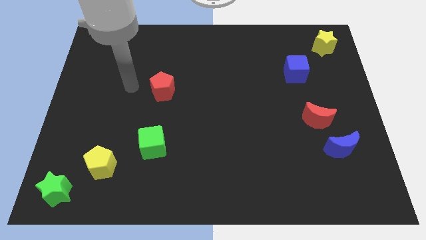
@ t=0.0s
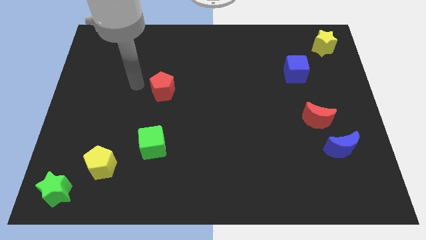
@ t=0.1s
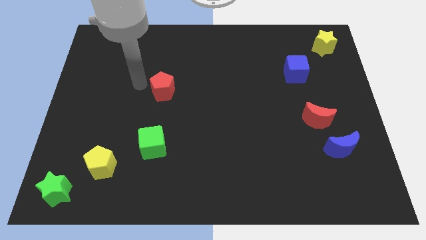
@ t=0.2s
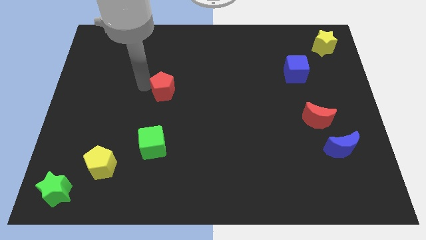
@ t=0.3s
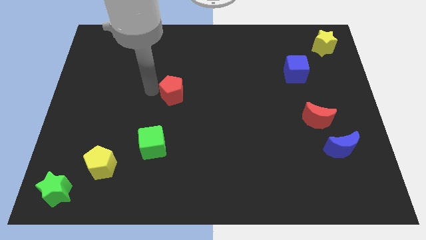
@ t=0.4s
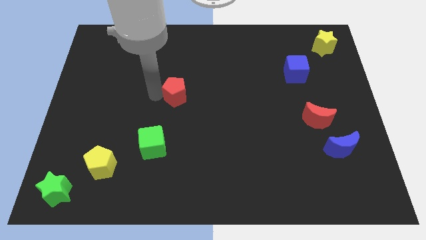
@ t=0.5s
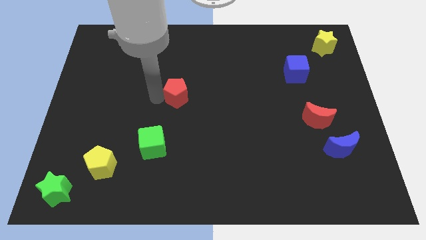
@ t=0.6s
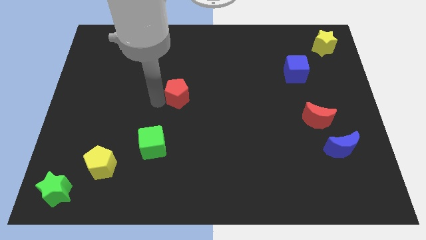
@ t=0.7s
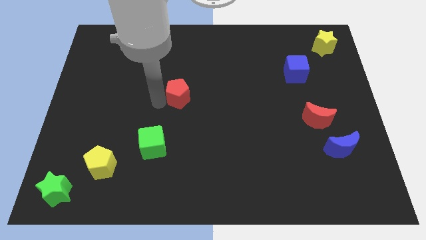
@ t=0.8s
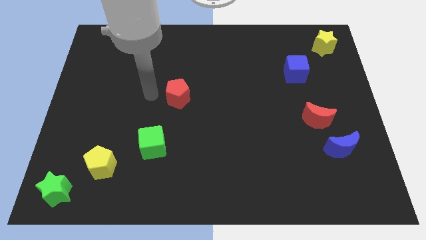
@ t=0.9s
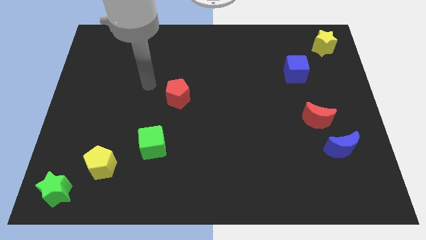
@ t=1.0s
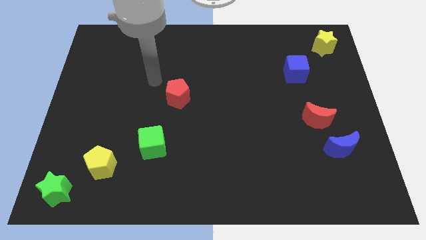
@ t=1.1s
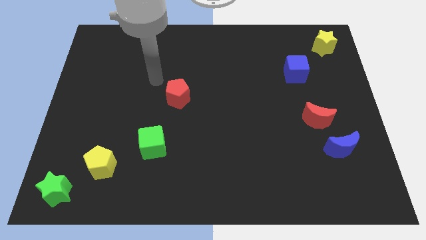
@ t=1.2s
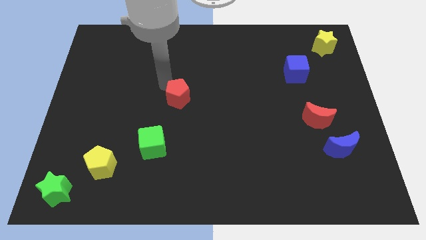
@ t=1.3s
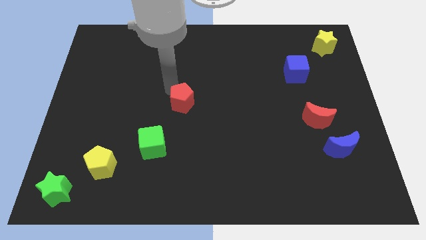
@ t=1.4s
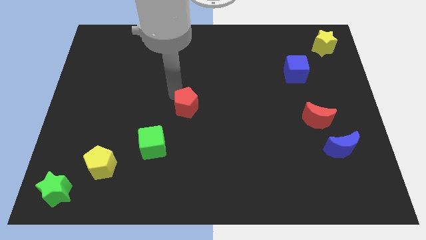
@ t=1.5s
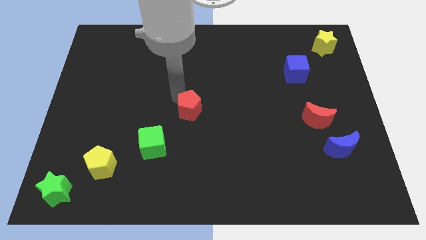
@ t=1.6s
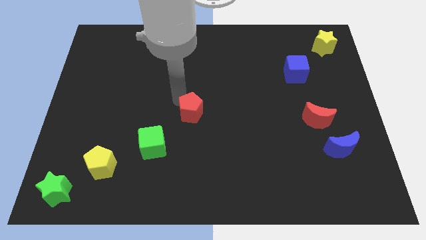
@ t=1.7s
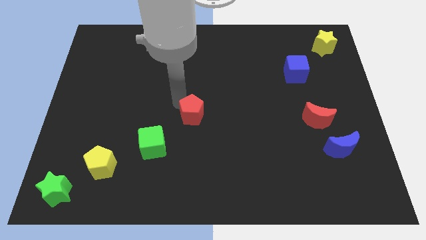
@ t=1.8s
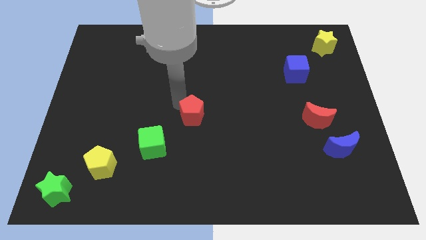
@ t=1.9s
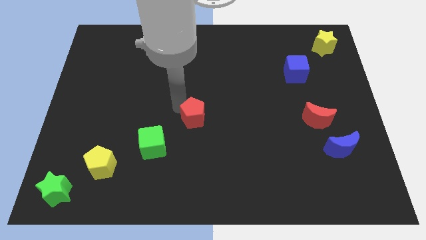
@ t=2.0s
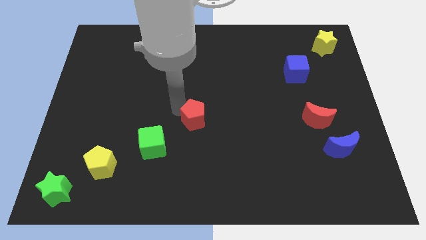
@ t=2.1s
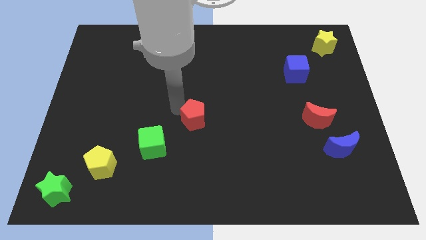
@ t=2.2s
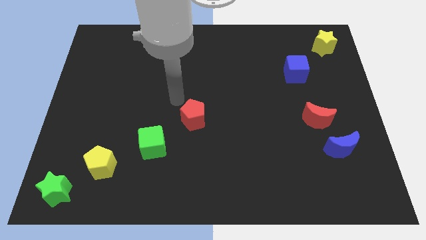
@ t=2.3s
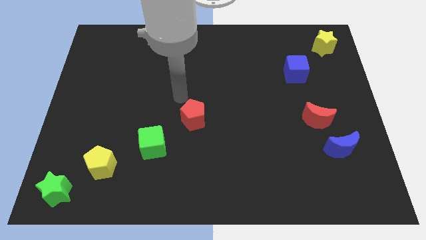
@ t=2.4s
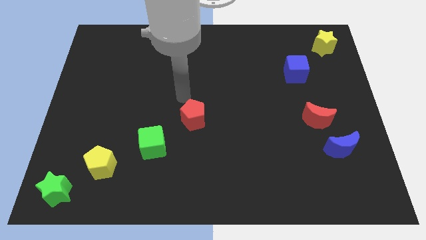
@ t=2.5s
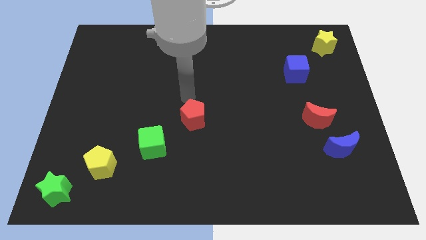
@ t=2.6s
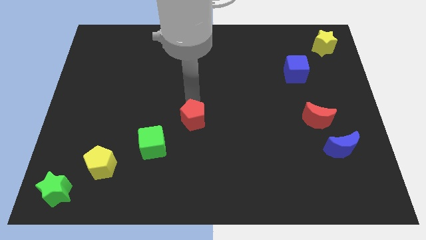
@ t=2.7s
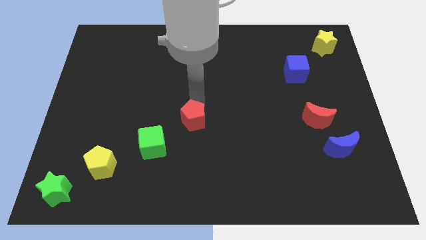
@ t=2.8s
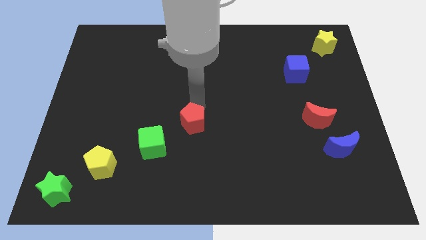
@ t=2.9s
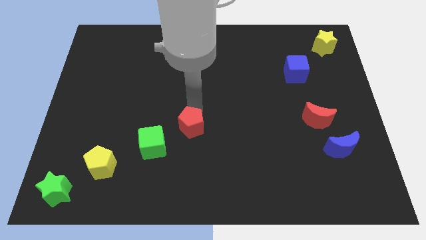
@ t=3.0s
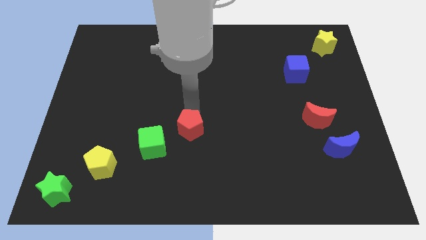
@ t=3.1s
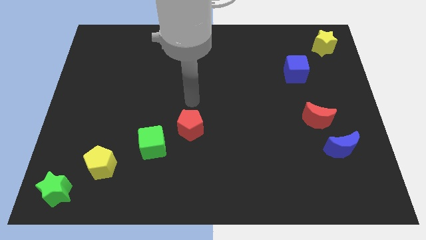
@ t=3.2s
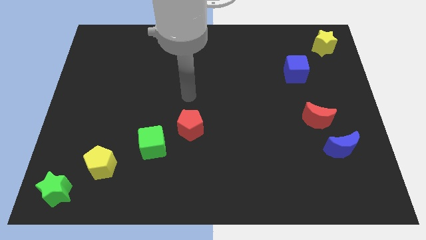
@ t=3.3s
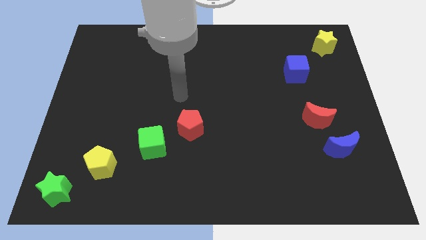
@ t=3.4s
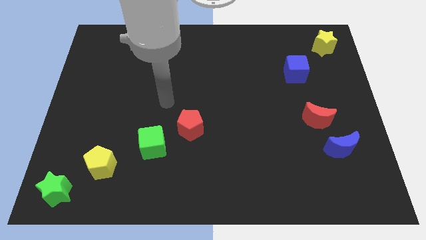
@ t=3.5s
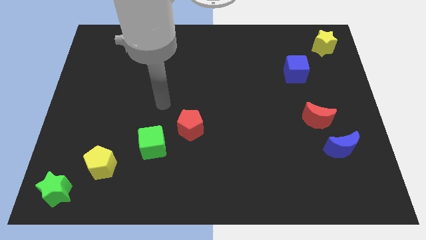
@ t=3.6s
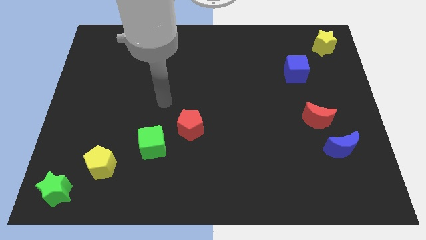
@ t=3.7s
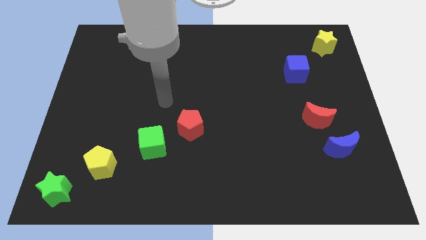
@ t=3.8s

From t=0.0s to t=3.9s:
place the red pentagon in between the blue cube and green cube

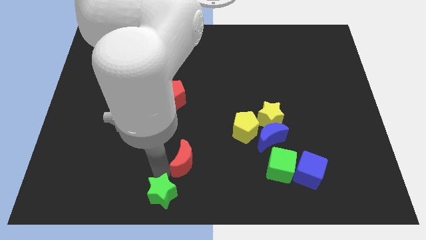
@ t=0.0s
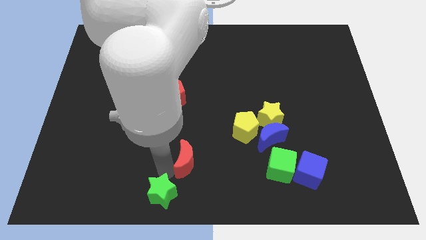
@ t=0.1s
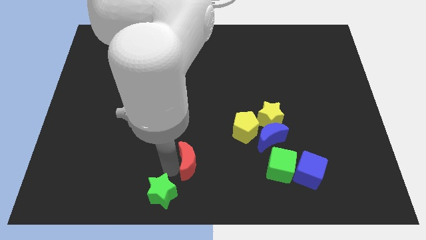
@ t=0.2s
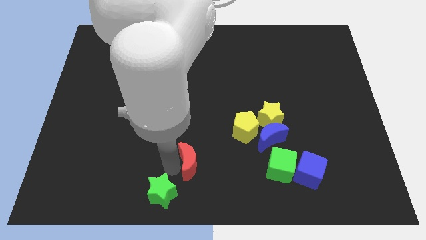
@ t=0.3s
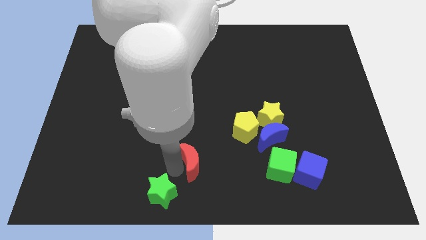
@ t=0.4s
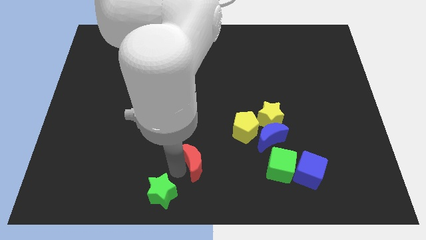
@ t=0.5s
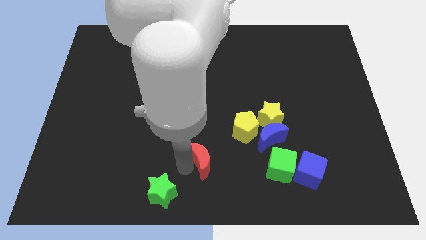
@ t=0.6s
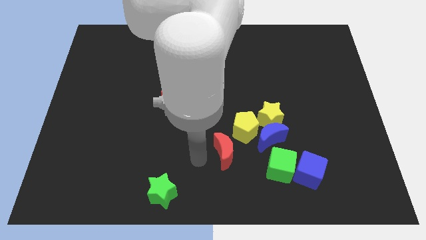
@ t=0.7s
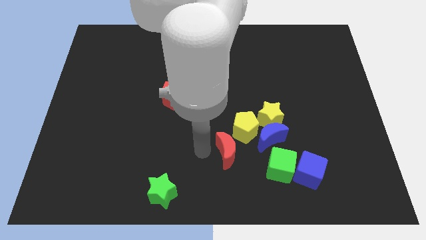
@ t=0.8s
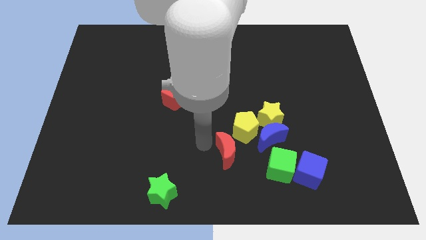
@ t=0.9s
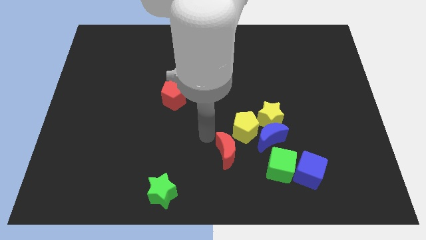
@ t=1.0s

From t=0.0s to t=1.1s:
separate red moon from green star

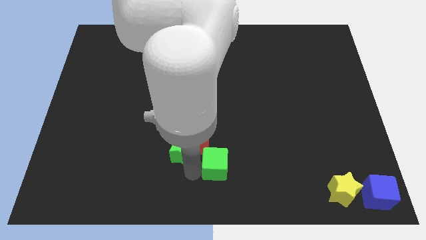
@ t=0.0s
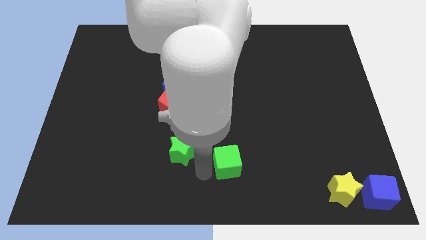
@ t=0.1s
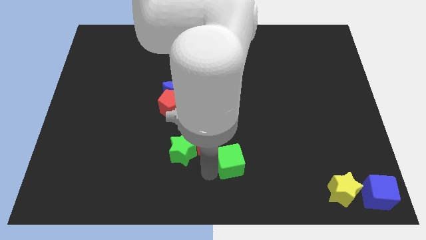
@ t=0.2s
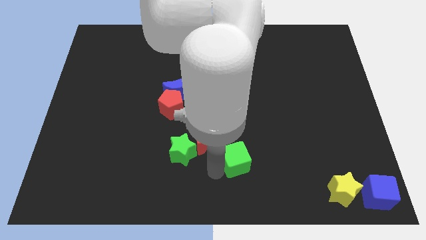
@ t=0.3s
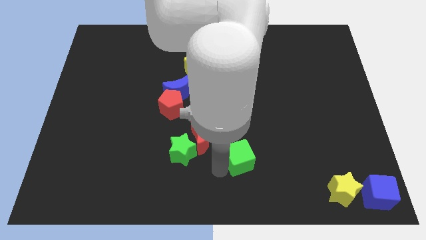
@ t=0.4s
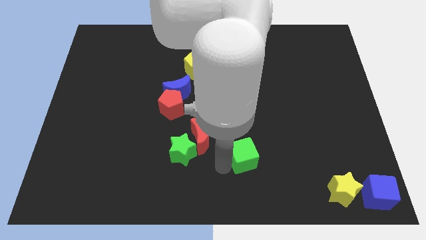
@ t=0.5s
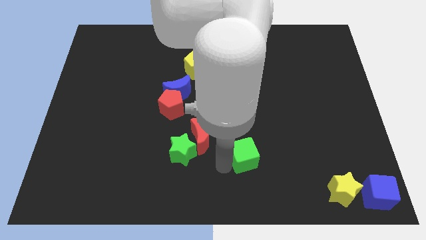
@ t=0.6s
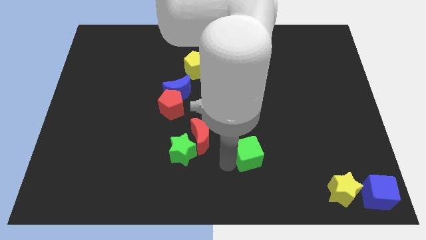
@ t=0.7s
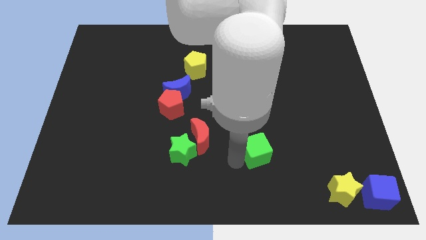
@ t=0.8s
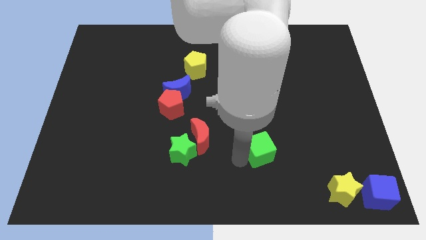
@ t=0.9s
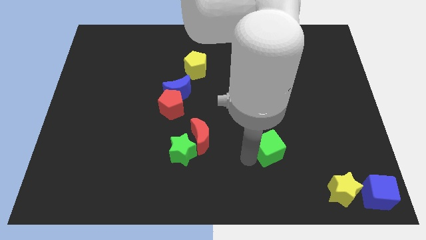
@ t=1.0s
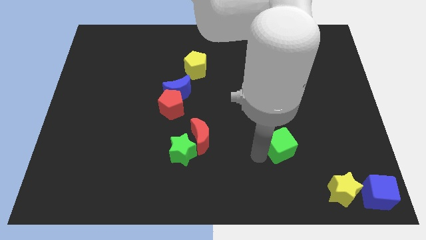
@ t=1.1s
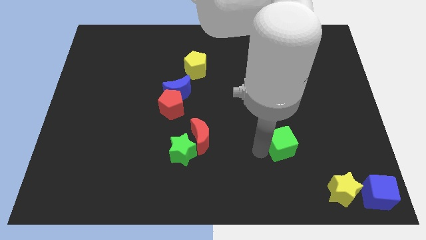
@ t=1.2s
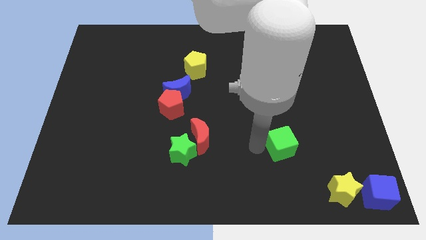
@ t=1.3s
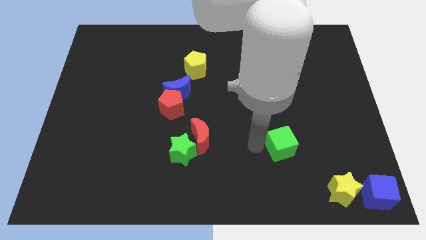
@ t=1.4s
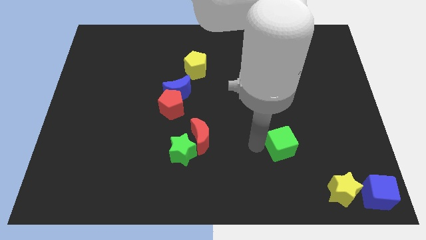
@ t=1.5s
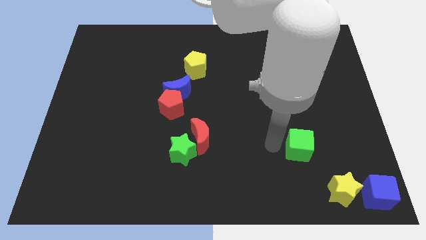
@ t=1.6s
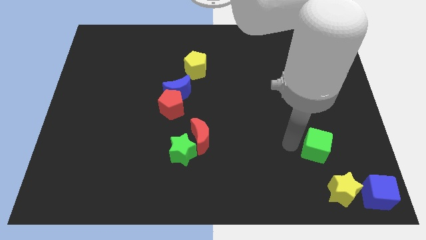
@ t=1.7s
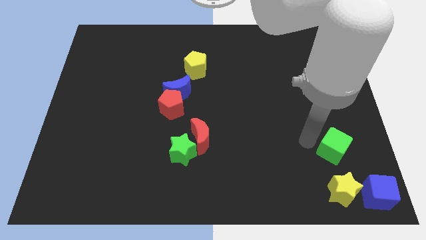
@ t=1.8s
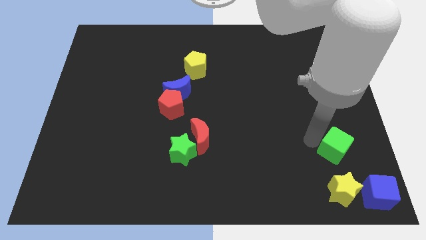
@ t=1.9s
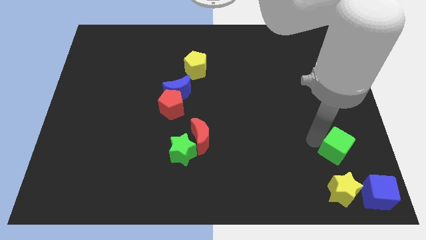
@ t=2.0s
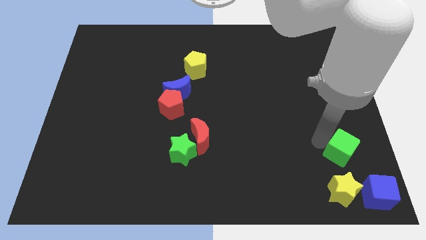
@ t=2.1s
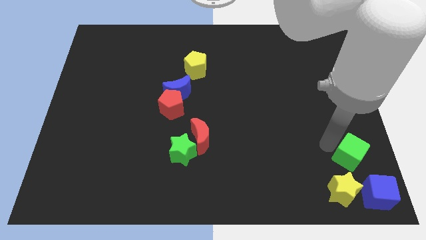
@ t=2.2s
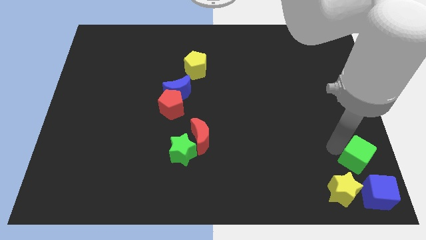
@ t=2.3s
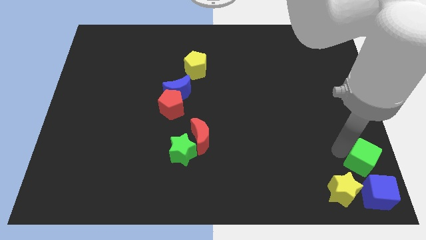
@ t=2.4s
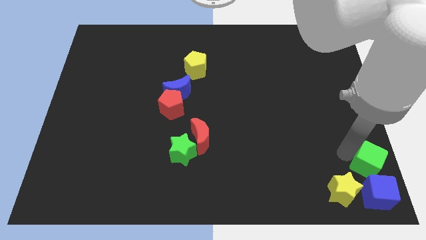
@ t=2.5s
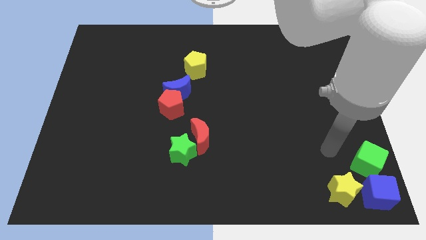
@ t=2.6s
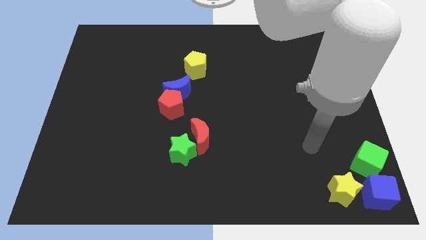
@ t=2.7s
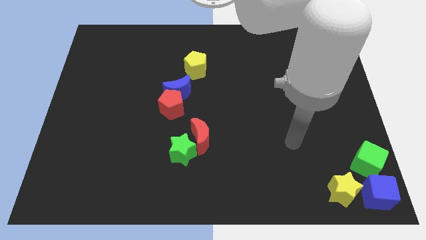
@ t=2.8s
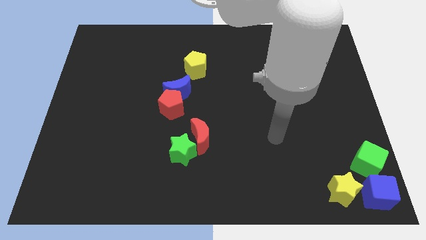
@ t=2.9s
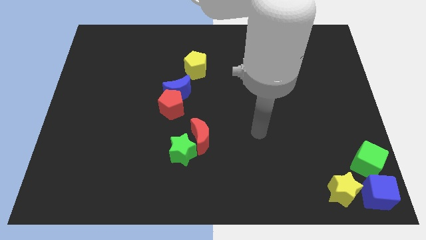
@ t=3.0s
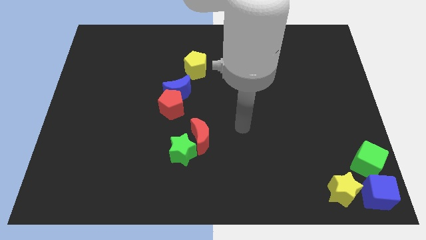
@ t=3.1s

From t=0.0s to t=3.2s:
slide the green cube to the right side of the board

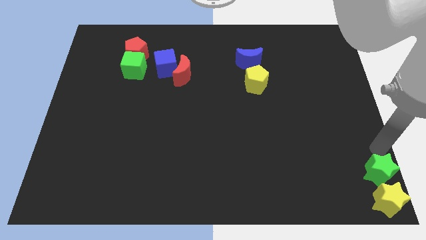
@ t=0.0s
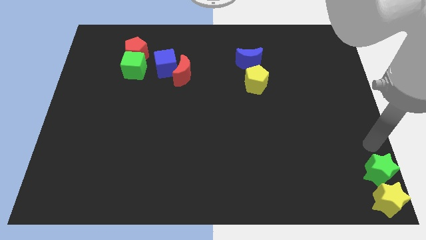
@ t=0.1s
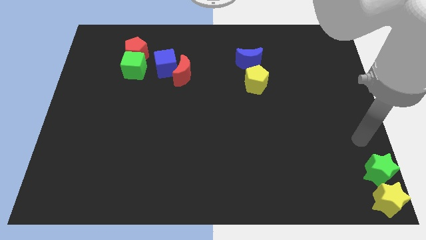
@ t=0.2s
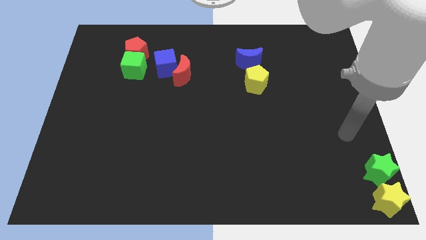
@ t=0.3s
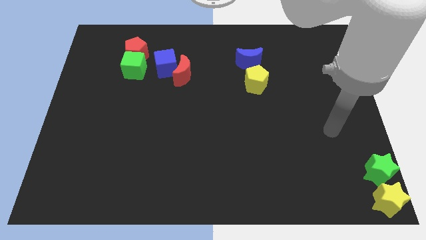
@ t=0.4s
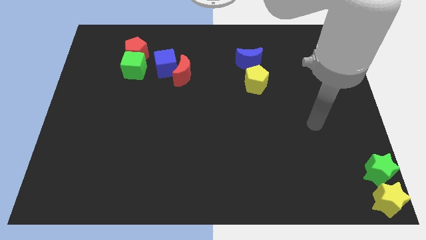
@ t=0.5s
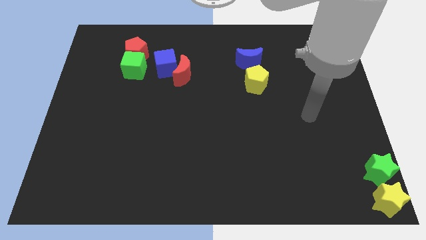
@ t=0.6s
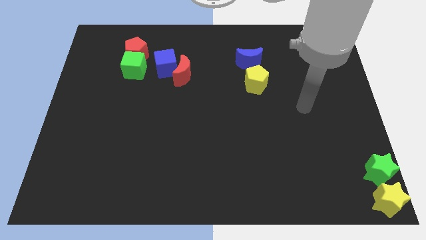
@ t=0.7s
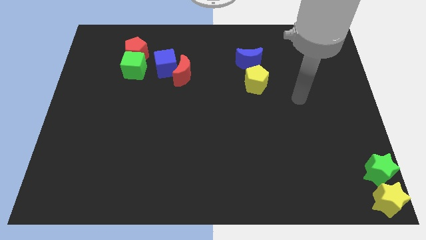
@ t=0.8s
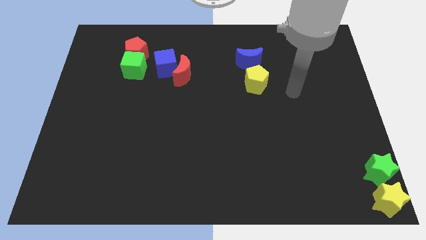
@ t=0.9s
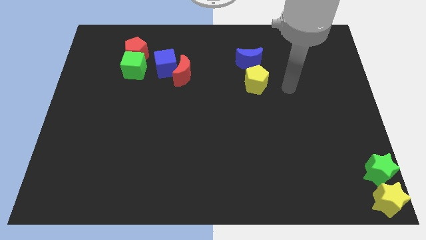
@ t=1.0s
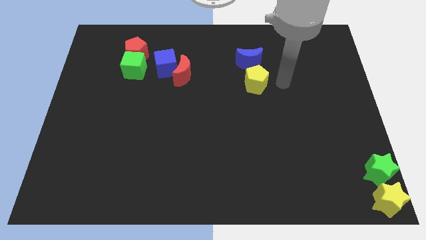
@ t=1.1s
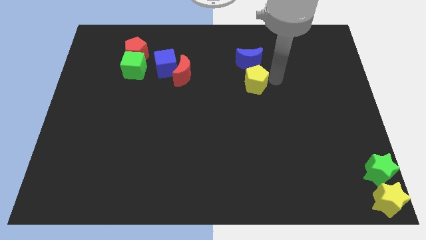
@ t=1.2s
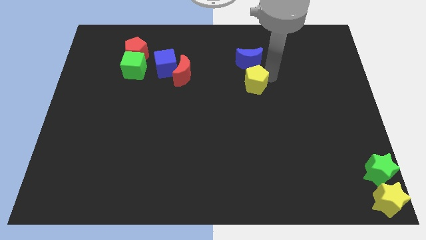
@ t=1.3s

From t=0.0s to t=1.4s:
move your arm right to the yellow pentagon
